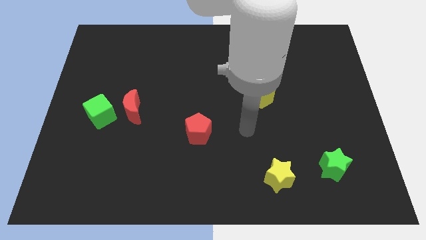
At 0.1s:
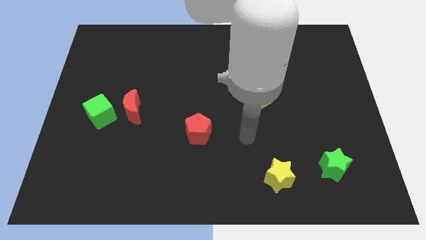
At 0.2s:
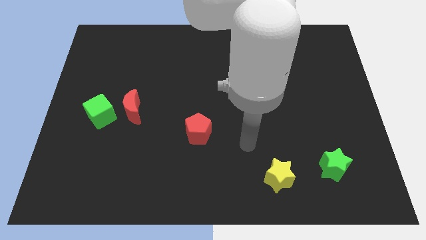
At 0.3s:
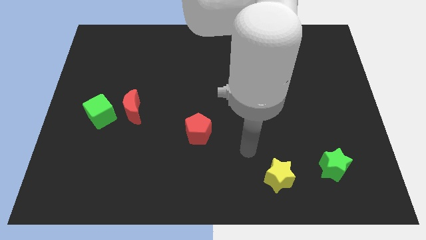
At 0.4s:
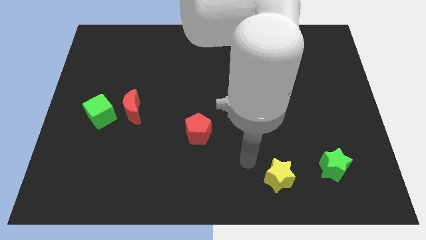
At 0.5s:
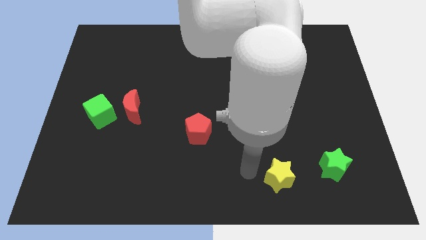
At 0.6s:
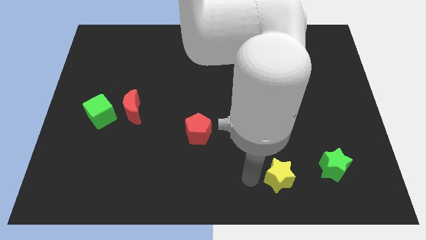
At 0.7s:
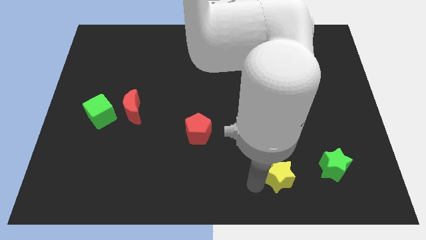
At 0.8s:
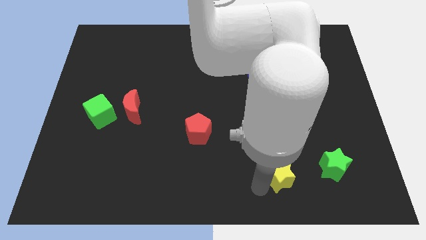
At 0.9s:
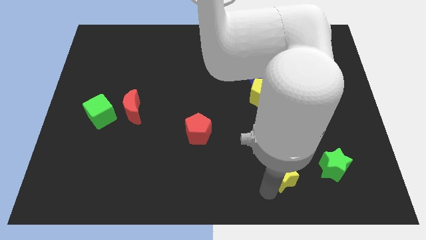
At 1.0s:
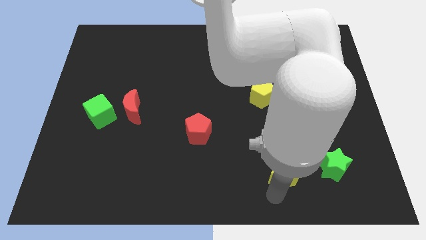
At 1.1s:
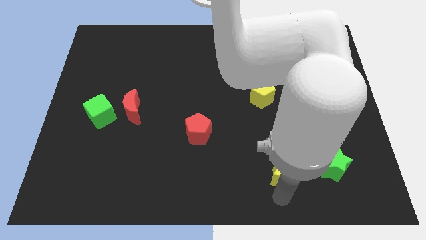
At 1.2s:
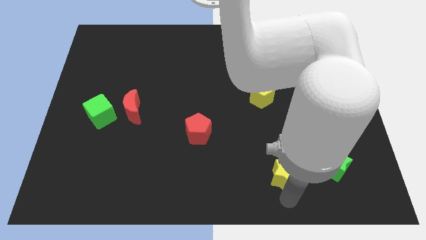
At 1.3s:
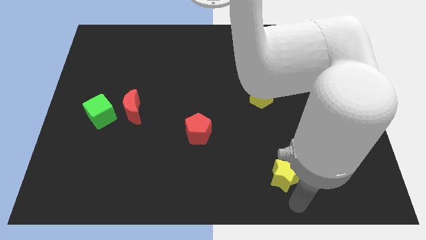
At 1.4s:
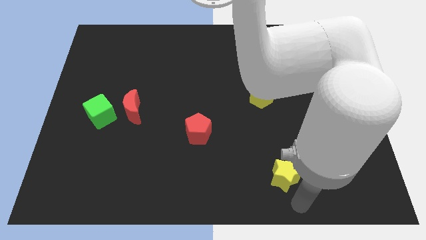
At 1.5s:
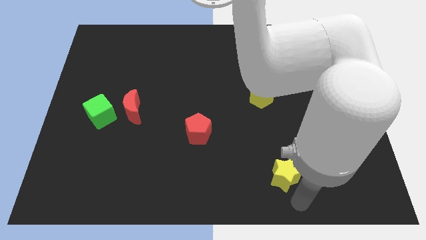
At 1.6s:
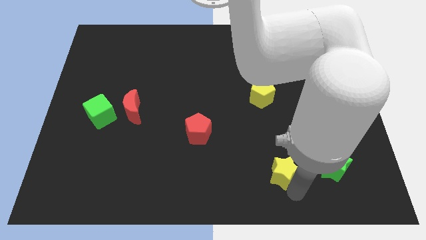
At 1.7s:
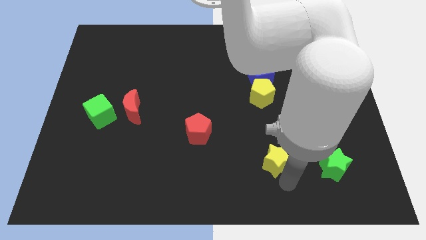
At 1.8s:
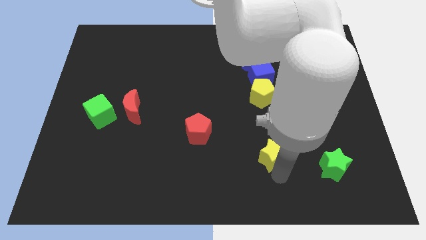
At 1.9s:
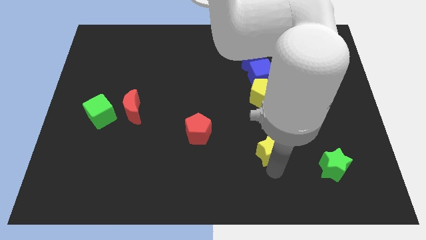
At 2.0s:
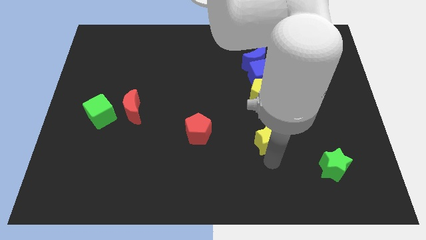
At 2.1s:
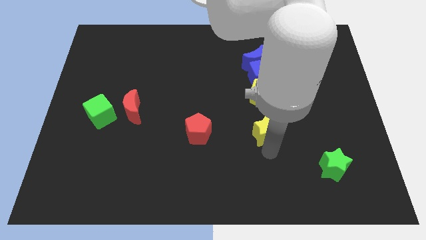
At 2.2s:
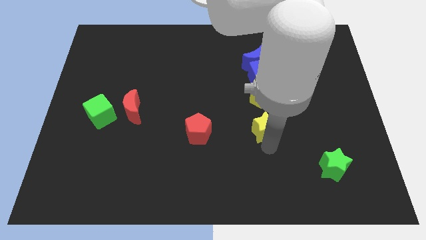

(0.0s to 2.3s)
move the yellow star to the right of the red pentagon

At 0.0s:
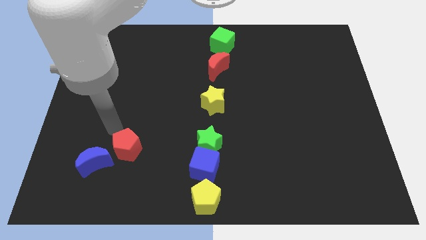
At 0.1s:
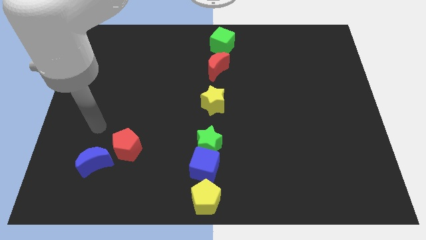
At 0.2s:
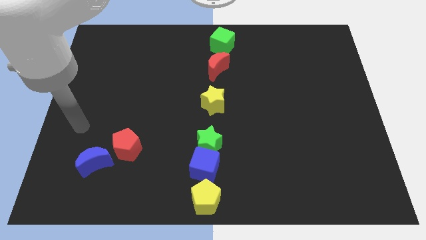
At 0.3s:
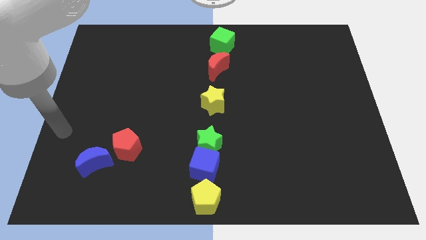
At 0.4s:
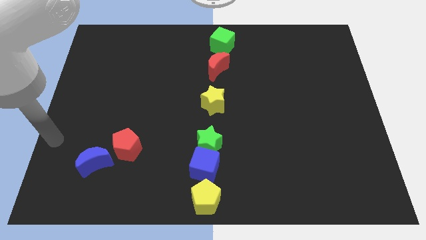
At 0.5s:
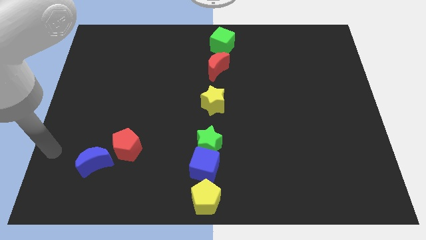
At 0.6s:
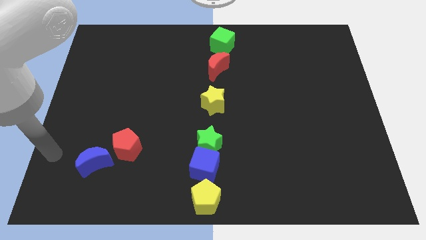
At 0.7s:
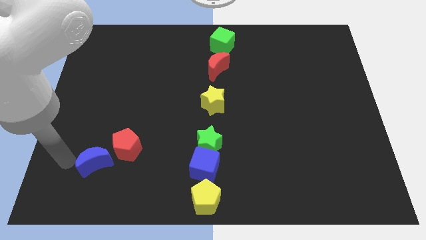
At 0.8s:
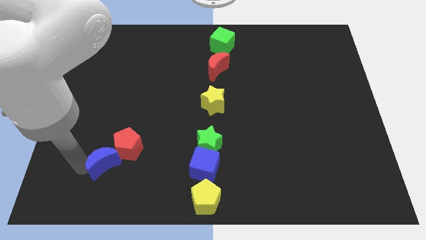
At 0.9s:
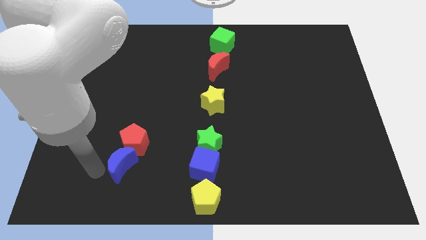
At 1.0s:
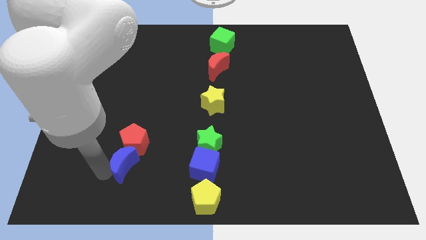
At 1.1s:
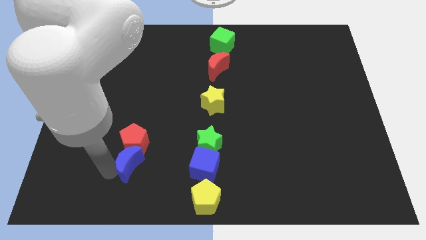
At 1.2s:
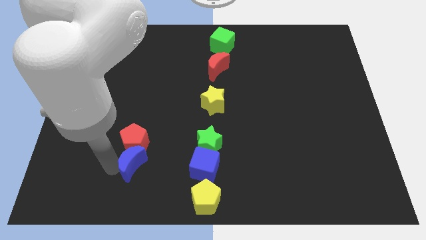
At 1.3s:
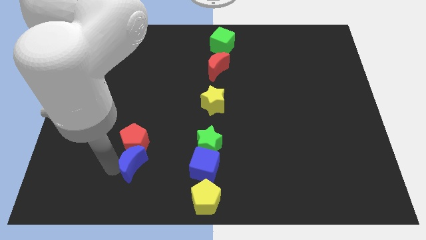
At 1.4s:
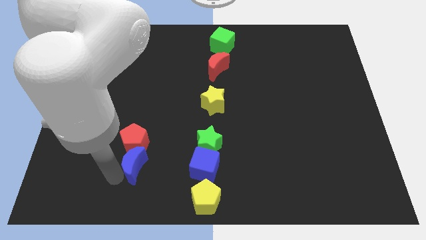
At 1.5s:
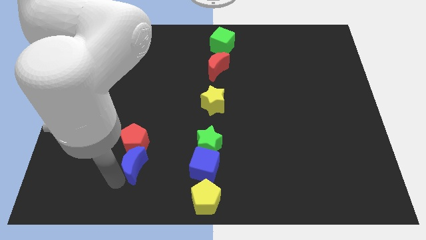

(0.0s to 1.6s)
place the blue crescent horizontally to the left side of the blue cube

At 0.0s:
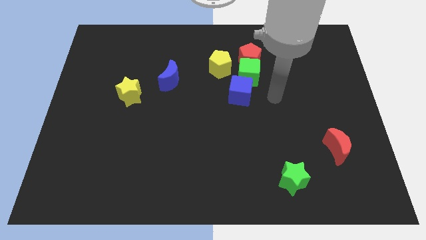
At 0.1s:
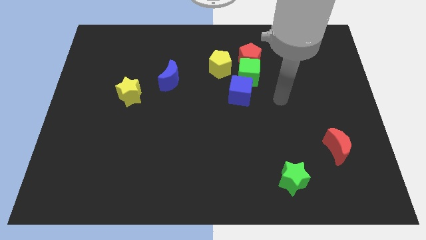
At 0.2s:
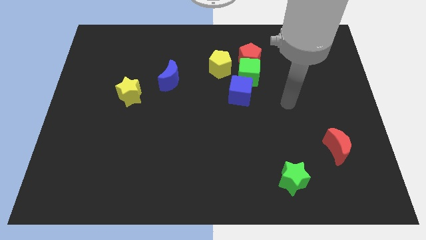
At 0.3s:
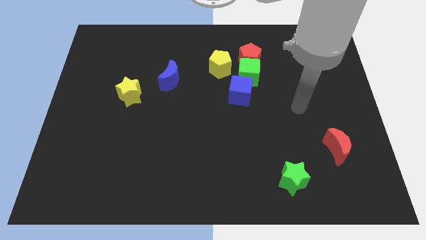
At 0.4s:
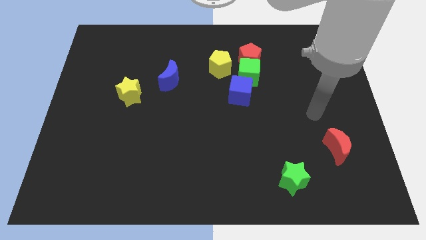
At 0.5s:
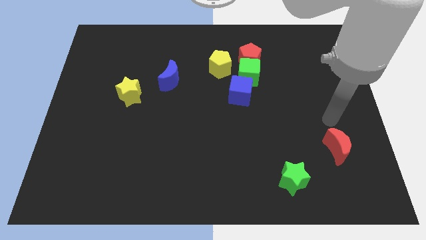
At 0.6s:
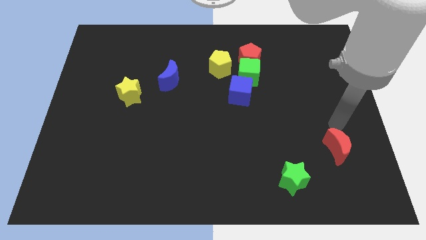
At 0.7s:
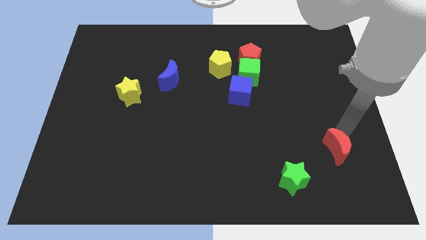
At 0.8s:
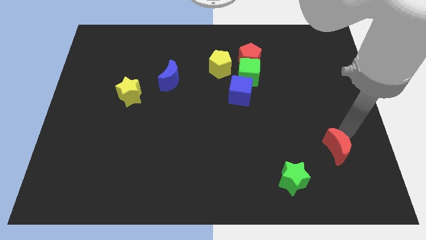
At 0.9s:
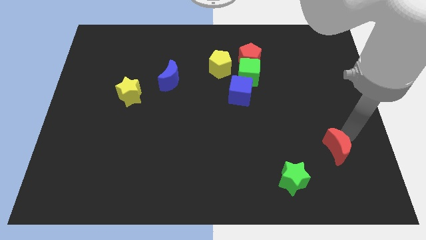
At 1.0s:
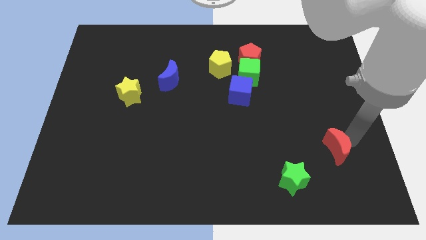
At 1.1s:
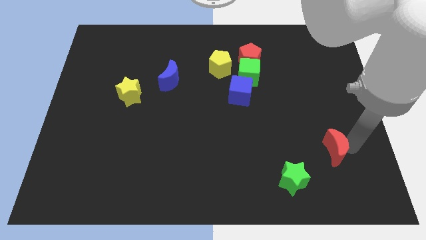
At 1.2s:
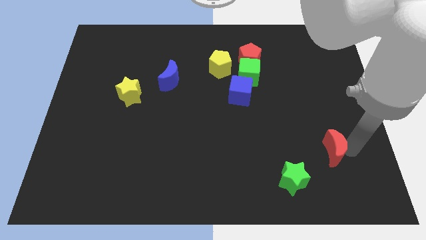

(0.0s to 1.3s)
move the arm to the right of the red moon

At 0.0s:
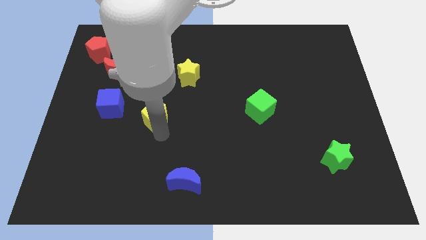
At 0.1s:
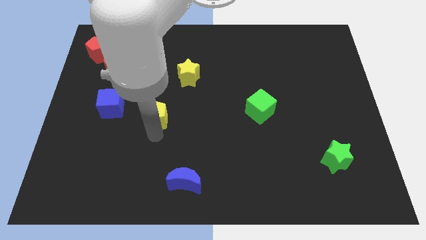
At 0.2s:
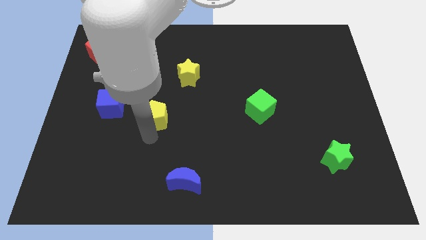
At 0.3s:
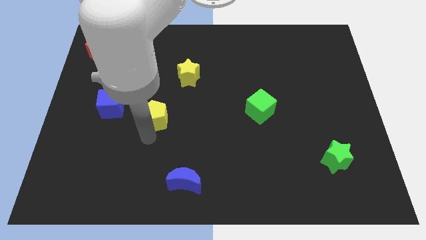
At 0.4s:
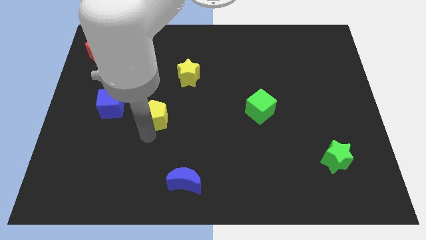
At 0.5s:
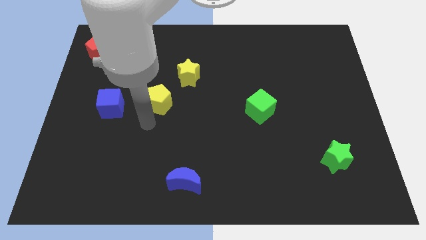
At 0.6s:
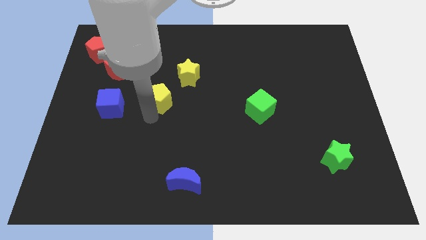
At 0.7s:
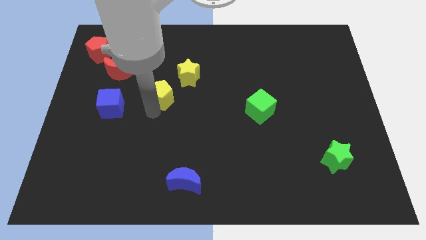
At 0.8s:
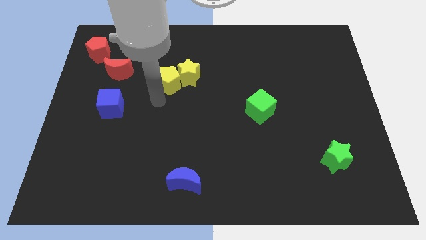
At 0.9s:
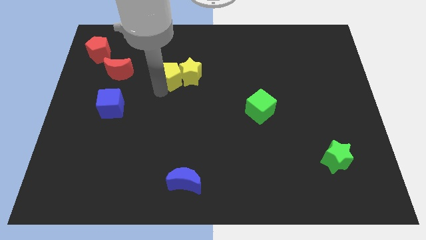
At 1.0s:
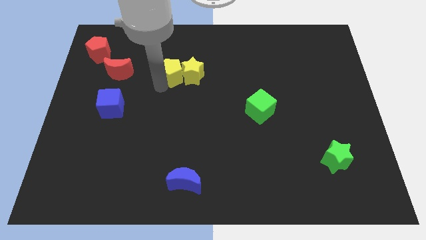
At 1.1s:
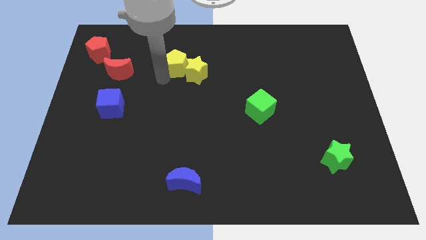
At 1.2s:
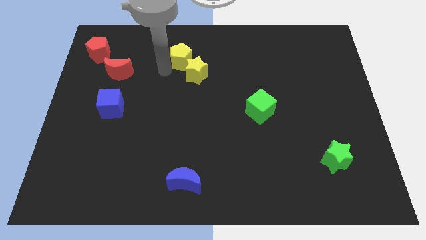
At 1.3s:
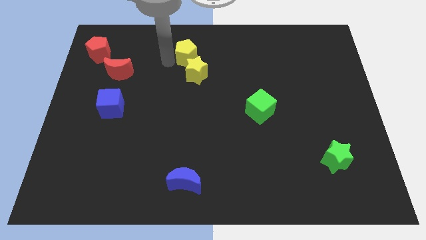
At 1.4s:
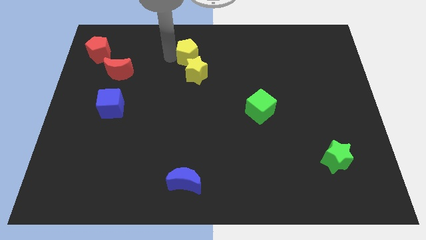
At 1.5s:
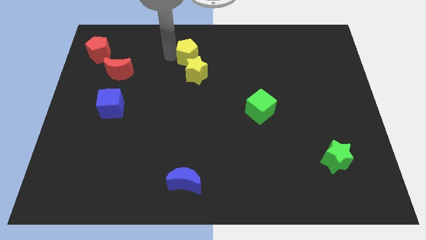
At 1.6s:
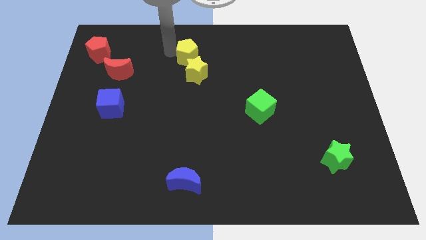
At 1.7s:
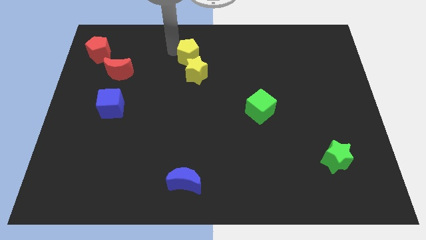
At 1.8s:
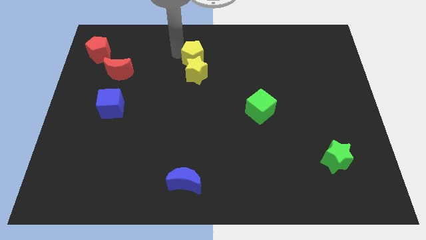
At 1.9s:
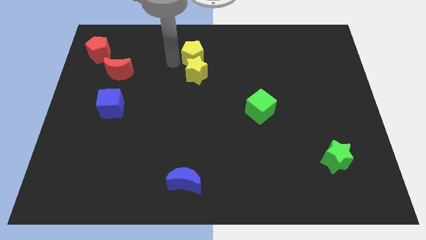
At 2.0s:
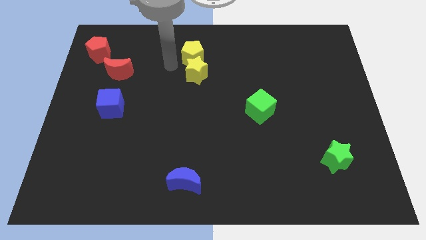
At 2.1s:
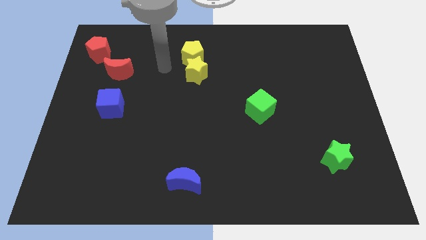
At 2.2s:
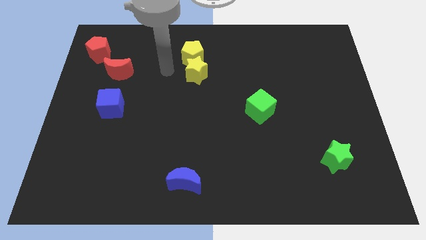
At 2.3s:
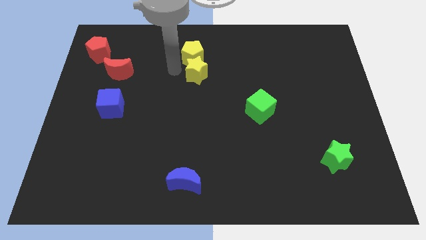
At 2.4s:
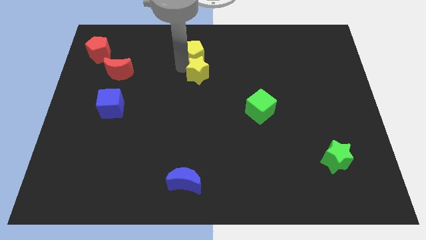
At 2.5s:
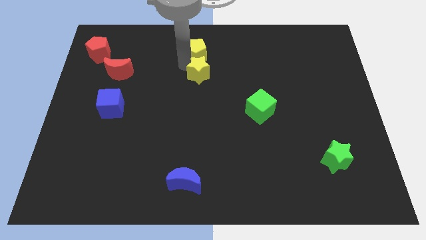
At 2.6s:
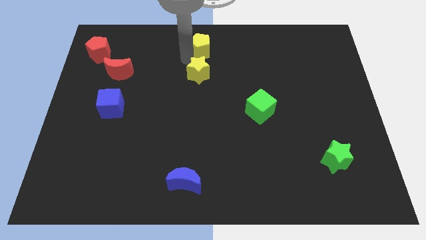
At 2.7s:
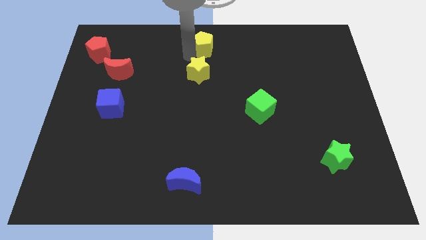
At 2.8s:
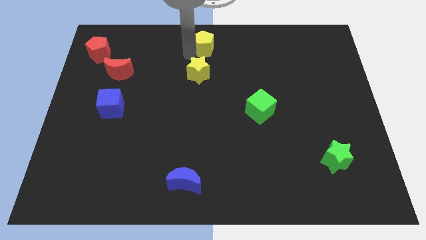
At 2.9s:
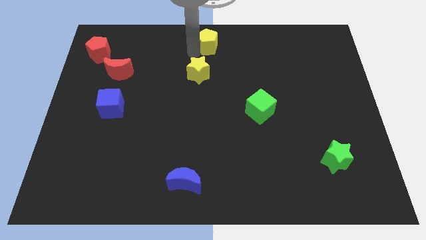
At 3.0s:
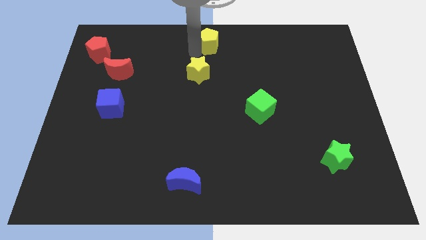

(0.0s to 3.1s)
drag the yellow pentagon to the top of the board

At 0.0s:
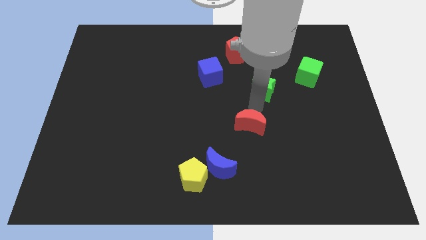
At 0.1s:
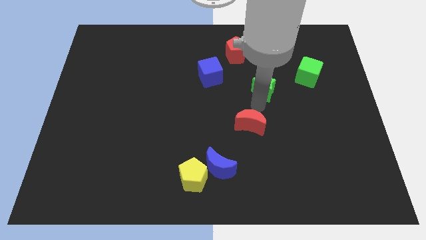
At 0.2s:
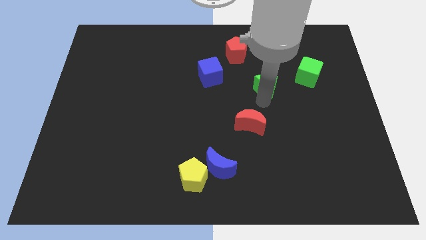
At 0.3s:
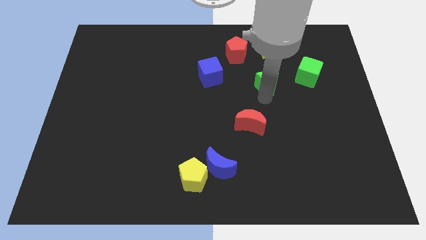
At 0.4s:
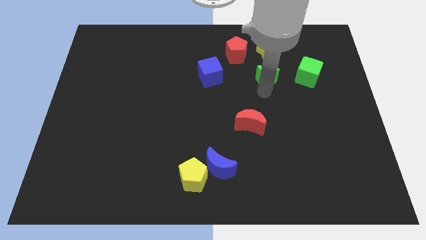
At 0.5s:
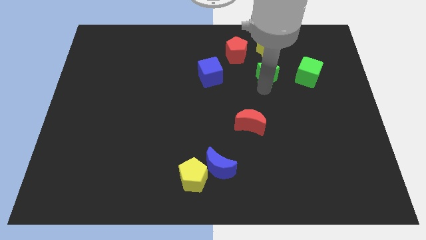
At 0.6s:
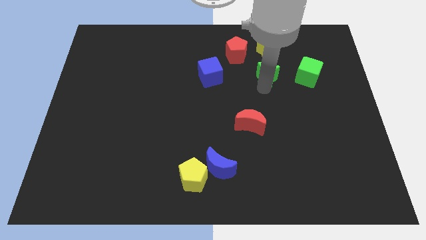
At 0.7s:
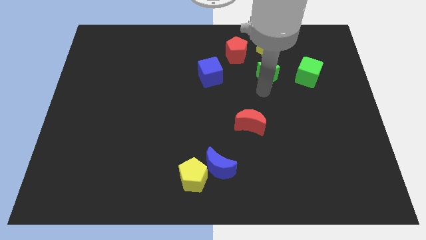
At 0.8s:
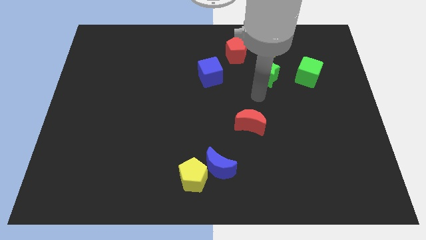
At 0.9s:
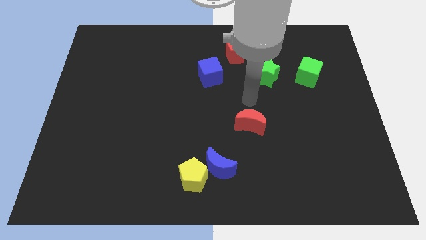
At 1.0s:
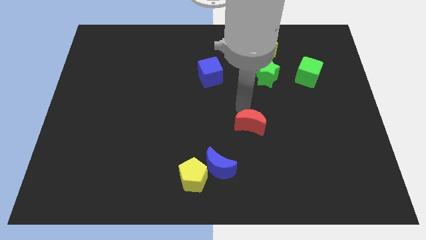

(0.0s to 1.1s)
move the green star towards the yellow star
